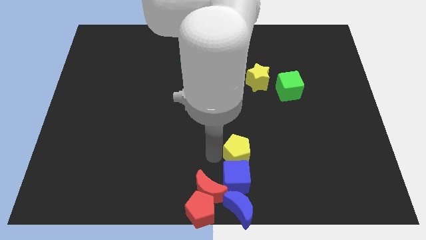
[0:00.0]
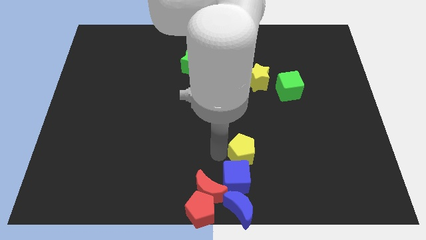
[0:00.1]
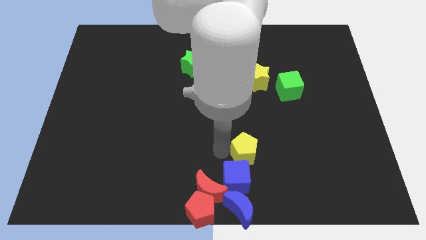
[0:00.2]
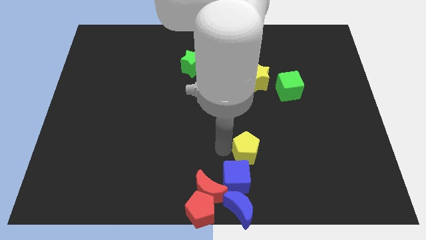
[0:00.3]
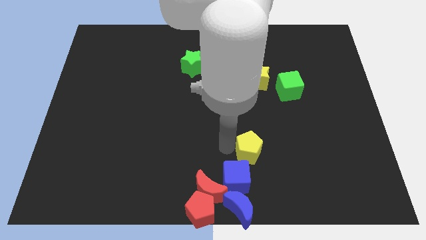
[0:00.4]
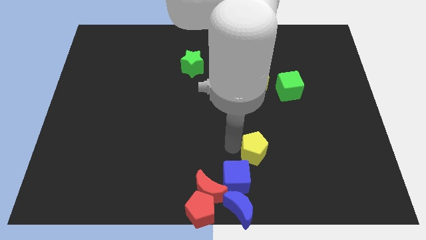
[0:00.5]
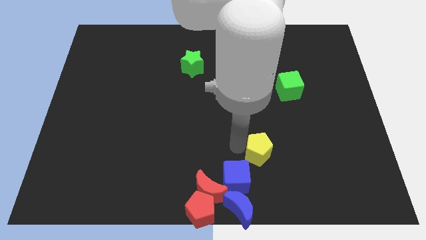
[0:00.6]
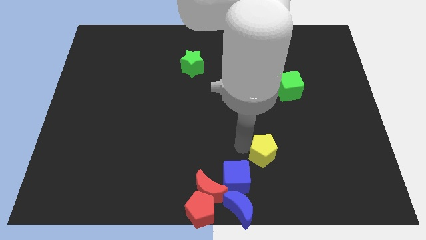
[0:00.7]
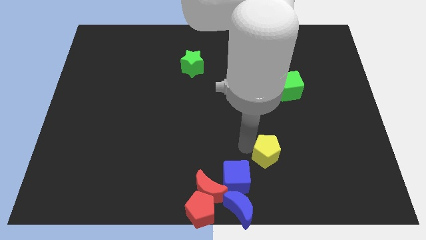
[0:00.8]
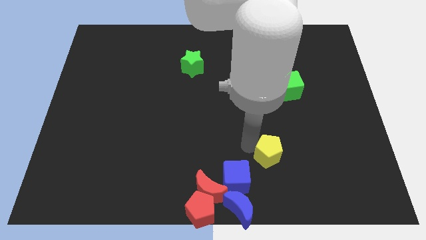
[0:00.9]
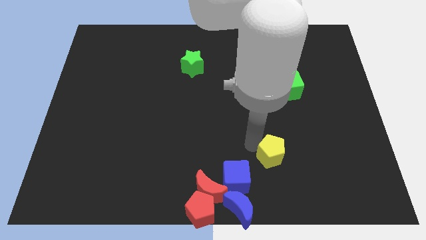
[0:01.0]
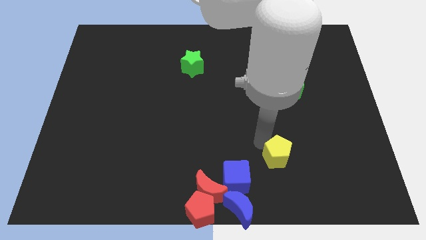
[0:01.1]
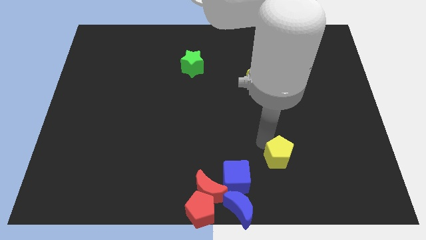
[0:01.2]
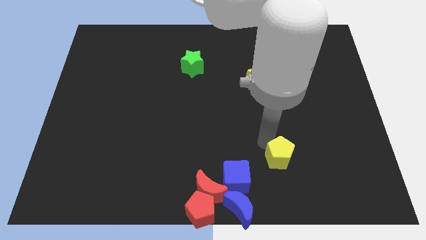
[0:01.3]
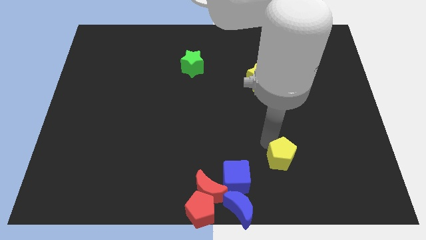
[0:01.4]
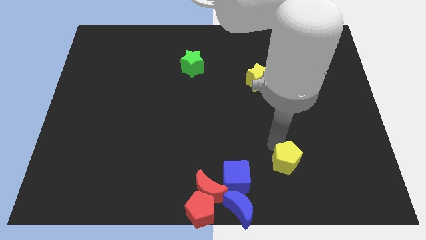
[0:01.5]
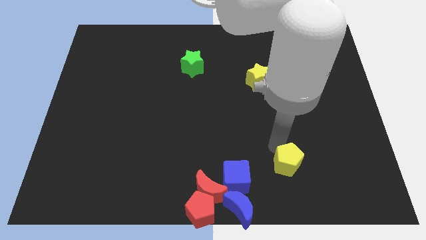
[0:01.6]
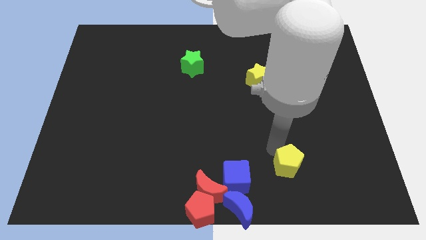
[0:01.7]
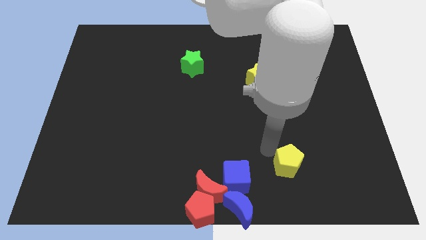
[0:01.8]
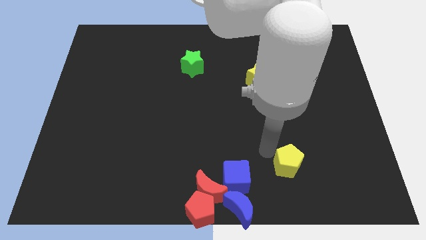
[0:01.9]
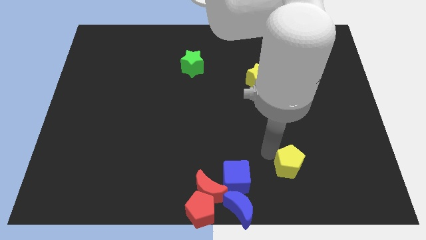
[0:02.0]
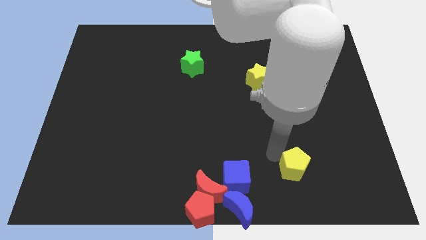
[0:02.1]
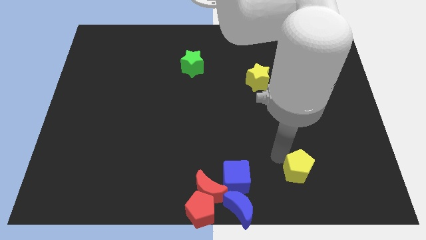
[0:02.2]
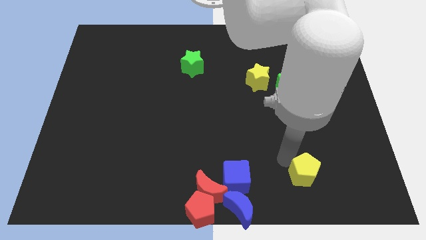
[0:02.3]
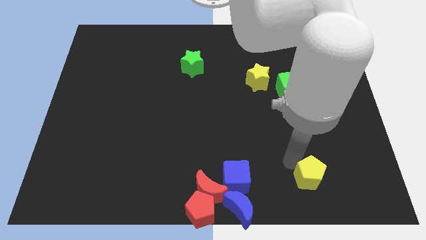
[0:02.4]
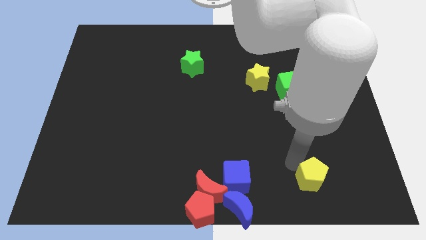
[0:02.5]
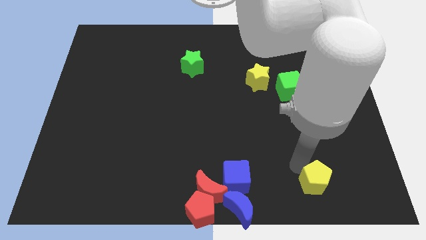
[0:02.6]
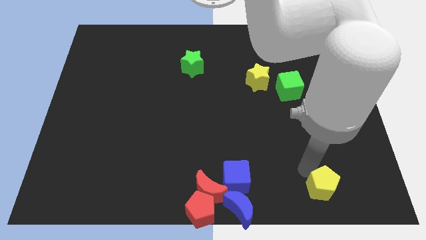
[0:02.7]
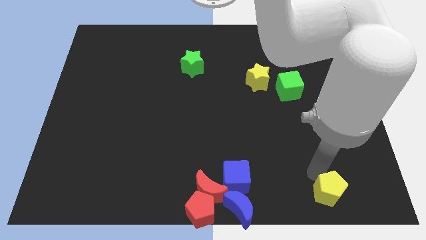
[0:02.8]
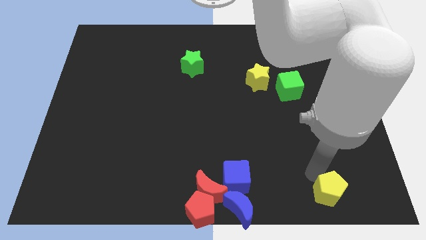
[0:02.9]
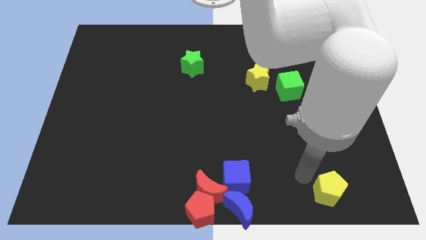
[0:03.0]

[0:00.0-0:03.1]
push the yellow pentagon to the right side of the group of blue blocks

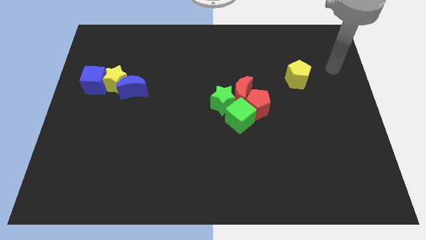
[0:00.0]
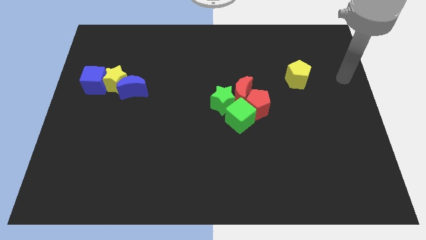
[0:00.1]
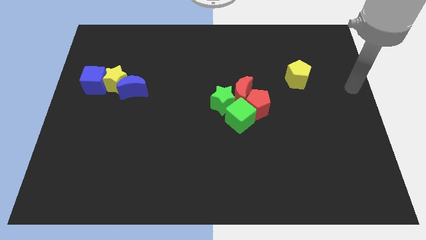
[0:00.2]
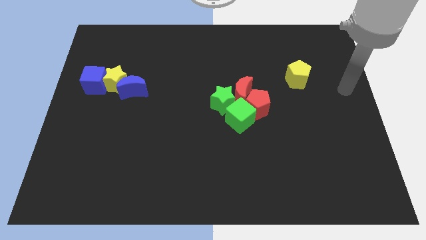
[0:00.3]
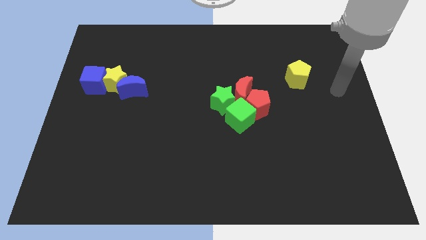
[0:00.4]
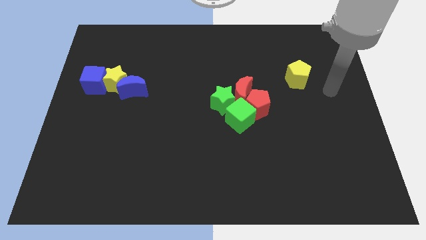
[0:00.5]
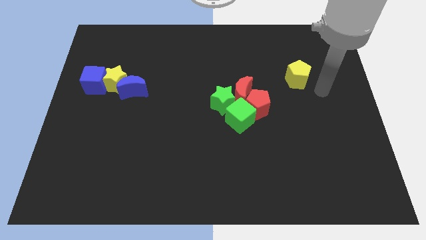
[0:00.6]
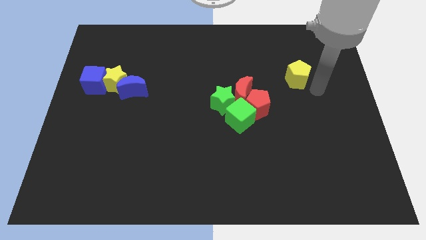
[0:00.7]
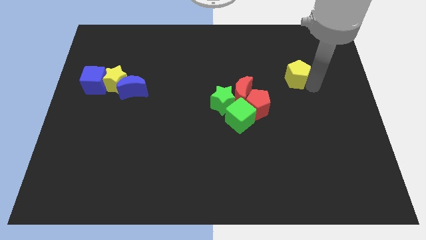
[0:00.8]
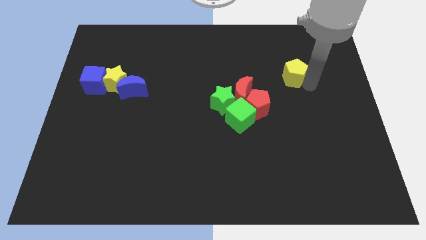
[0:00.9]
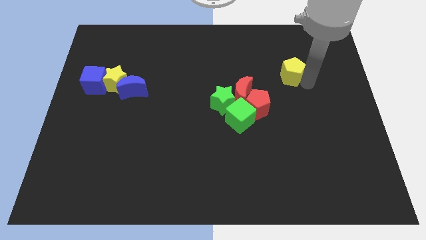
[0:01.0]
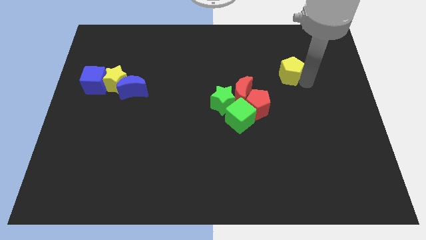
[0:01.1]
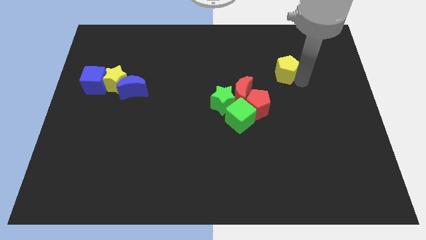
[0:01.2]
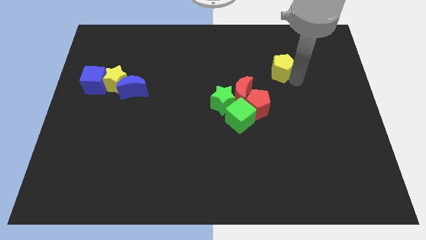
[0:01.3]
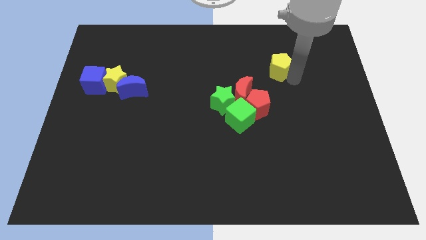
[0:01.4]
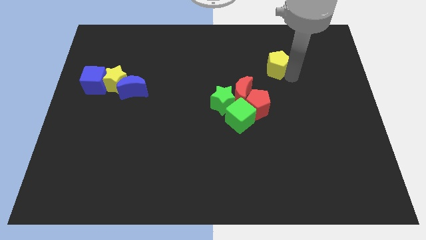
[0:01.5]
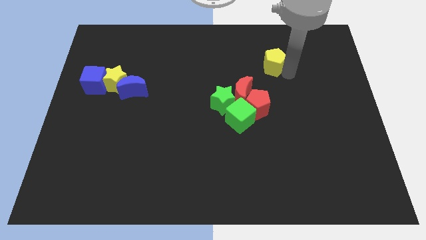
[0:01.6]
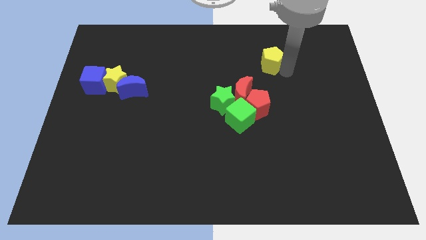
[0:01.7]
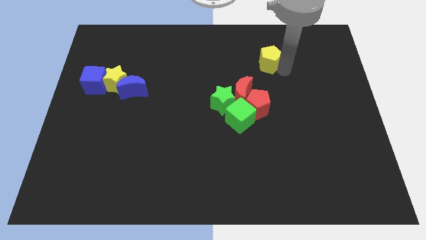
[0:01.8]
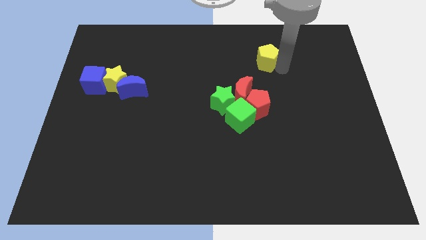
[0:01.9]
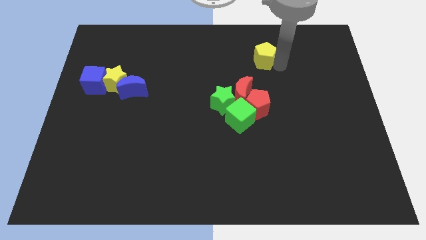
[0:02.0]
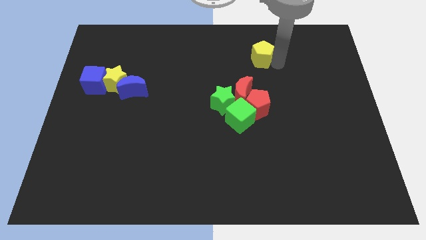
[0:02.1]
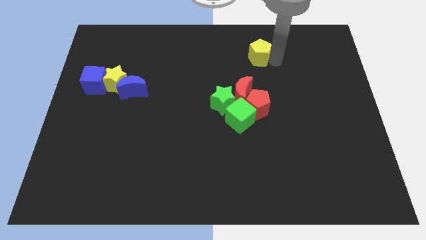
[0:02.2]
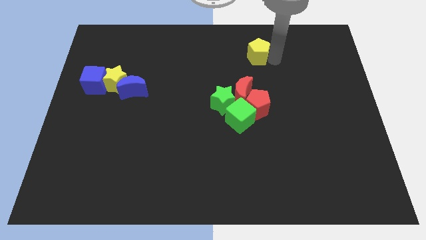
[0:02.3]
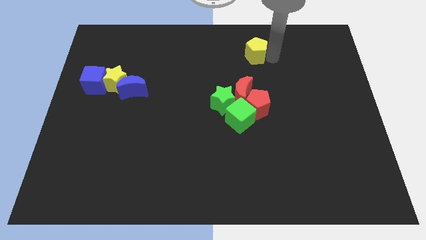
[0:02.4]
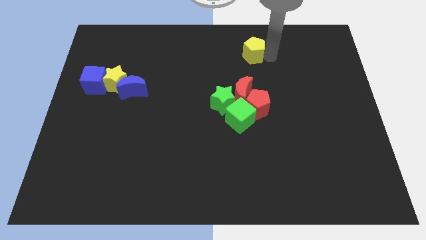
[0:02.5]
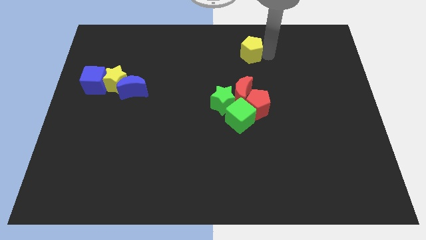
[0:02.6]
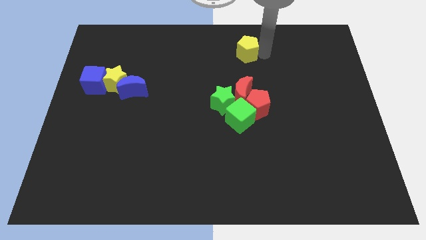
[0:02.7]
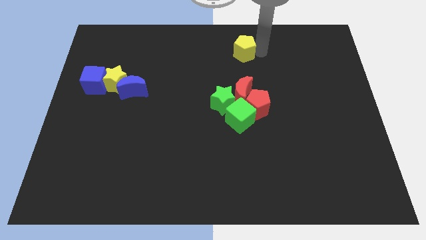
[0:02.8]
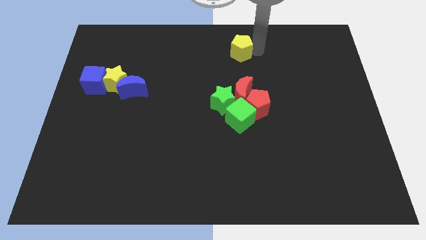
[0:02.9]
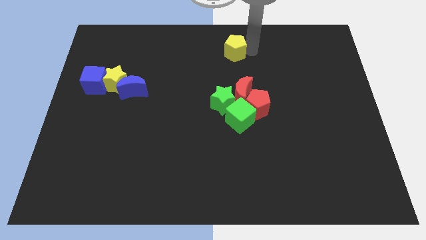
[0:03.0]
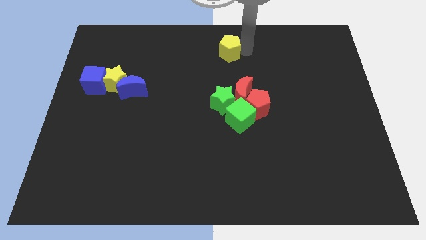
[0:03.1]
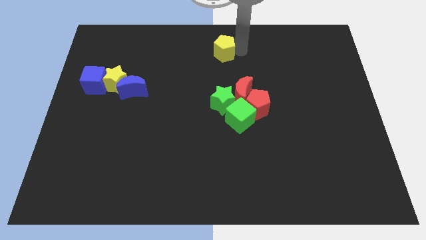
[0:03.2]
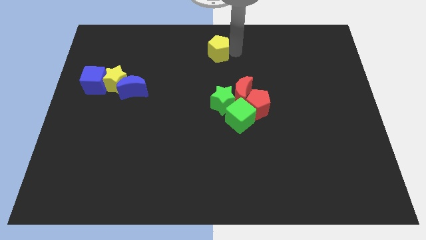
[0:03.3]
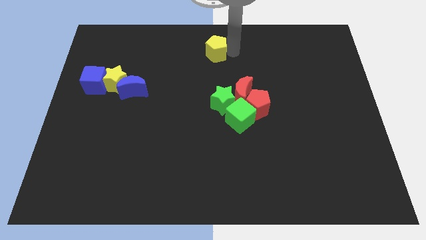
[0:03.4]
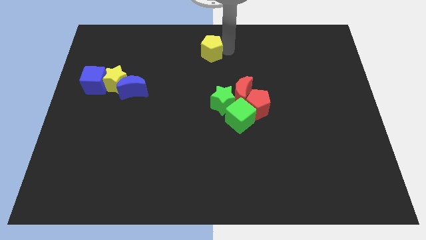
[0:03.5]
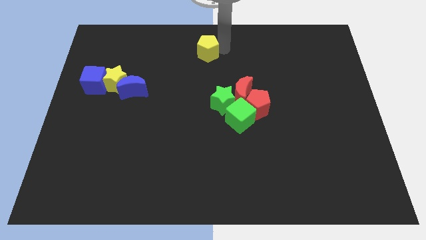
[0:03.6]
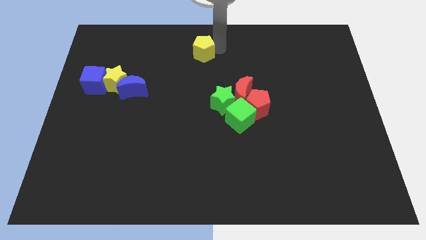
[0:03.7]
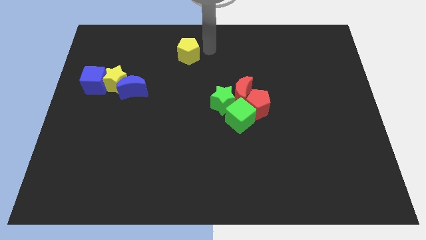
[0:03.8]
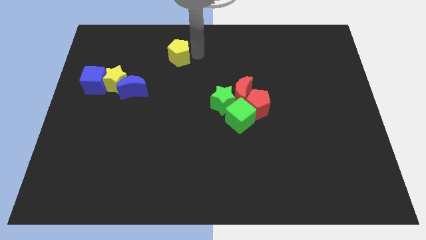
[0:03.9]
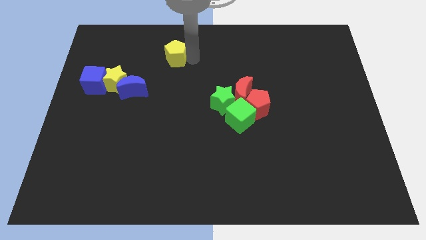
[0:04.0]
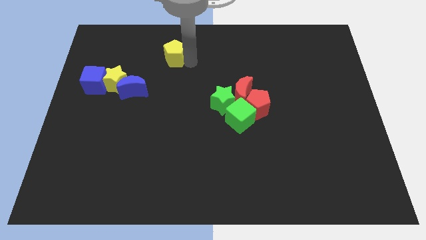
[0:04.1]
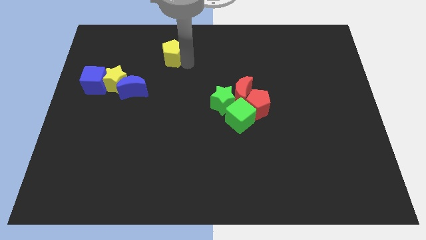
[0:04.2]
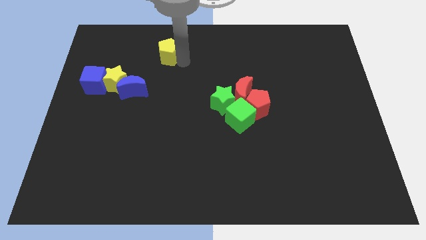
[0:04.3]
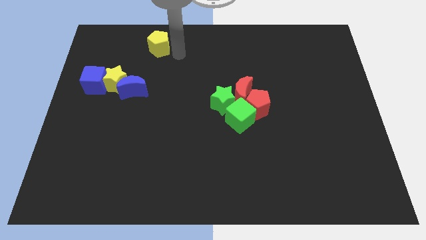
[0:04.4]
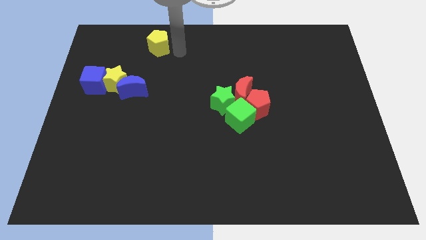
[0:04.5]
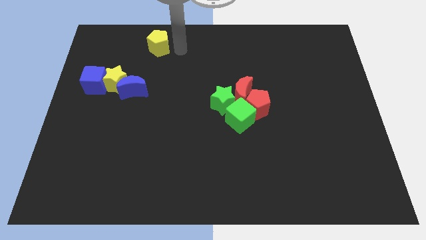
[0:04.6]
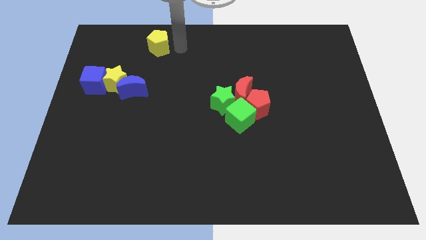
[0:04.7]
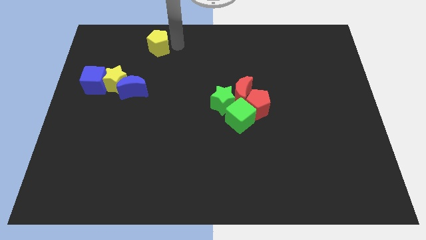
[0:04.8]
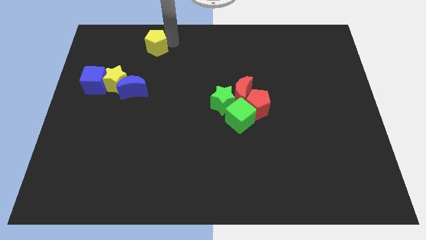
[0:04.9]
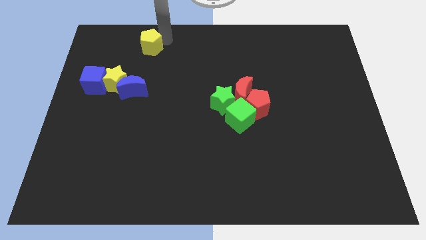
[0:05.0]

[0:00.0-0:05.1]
slide yellow pentagon towards top left

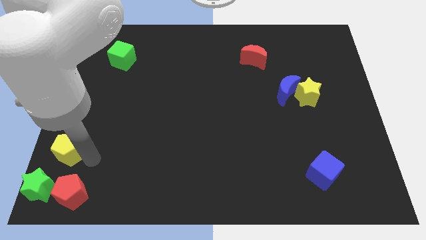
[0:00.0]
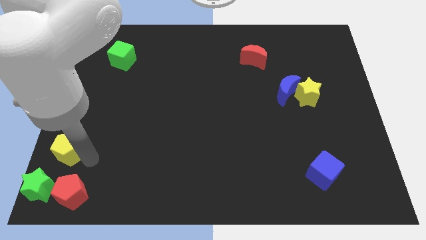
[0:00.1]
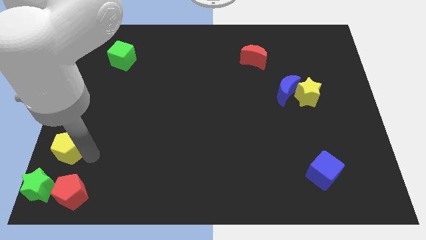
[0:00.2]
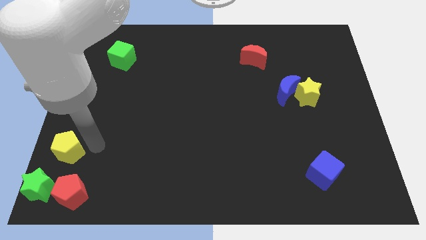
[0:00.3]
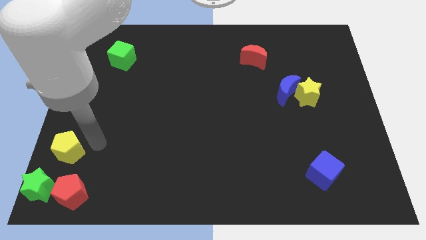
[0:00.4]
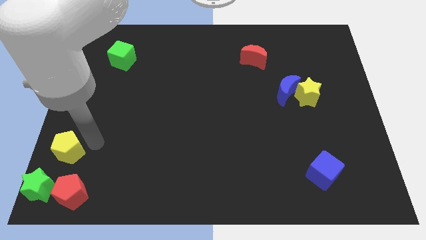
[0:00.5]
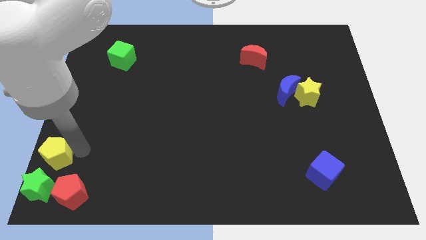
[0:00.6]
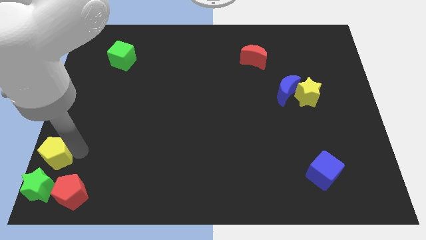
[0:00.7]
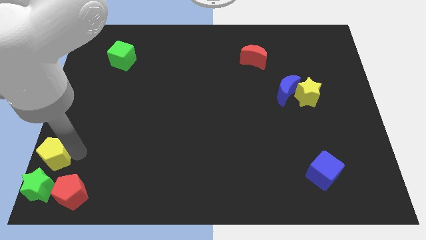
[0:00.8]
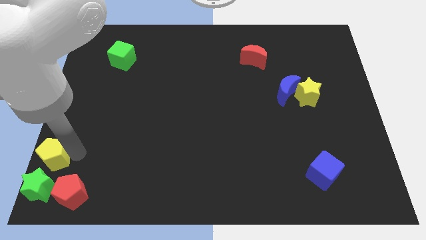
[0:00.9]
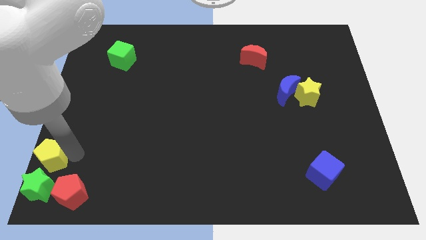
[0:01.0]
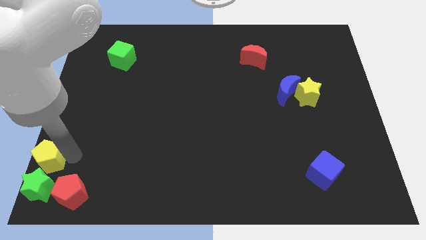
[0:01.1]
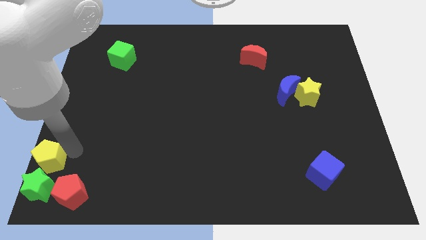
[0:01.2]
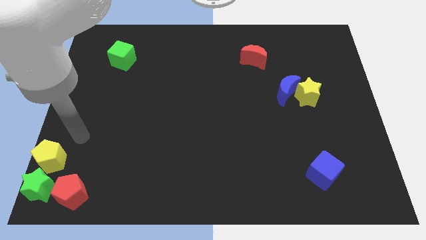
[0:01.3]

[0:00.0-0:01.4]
place the yellow pentagon above the green star
